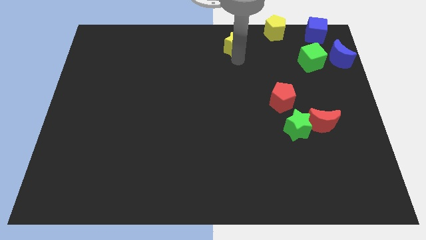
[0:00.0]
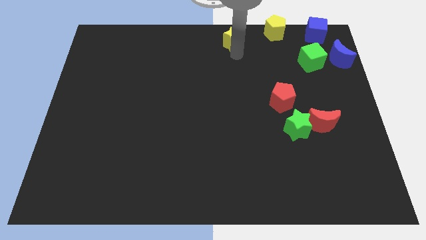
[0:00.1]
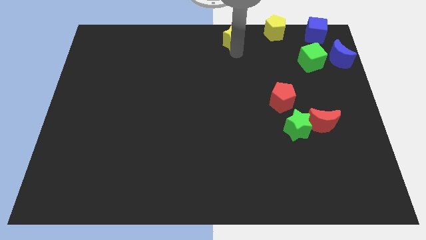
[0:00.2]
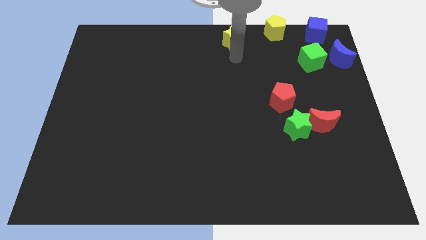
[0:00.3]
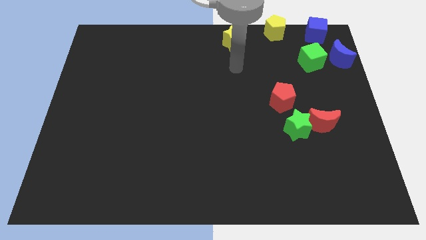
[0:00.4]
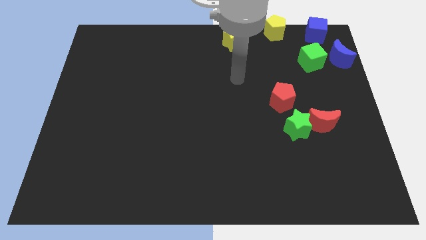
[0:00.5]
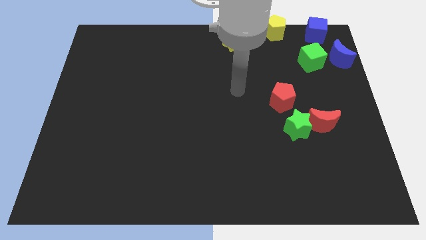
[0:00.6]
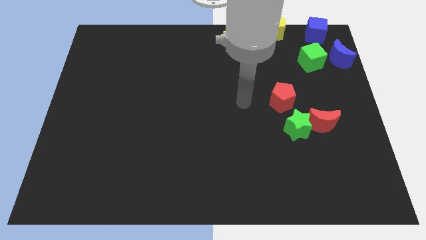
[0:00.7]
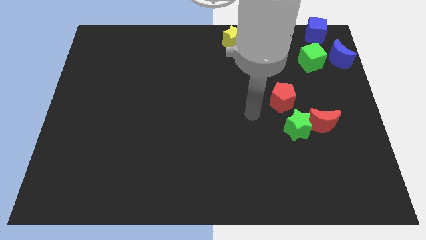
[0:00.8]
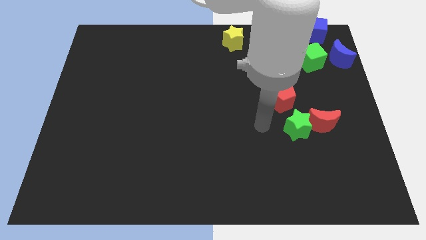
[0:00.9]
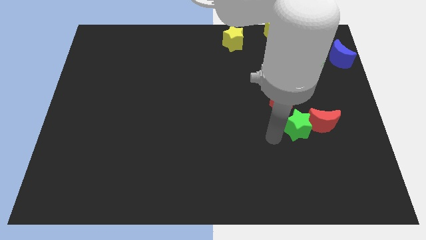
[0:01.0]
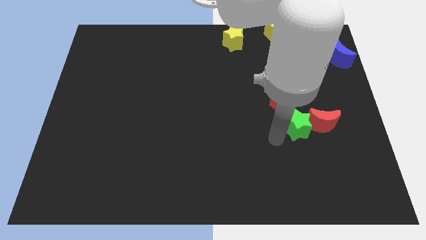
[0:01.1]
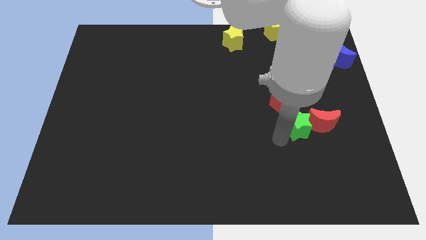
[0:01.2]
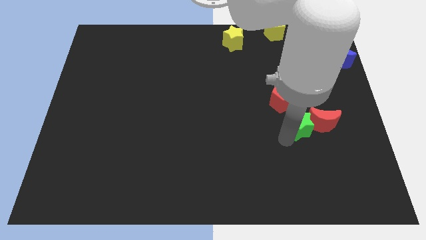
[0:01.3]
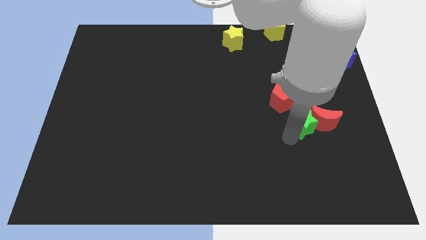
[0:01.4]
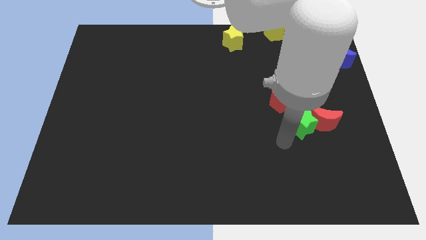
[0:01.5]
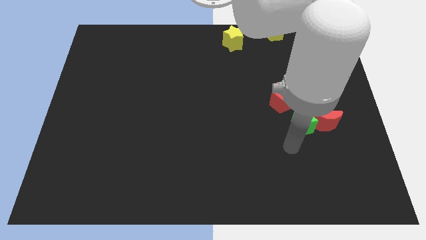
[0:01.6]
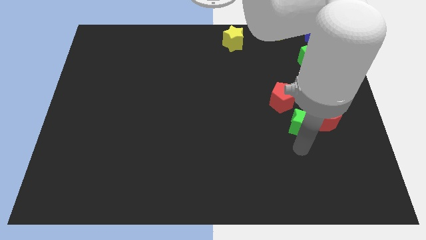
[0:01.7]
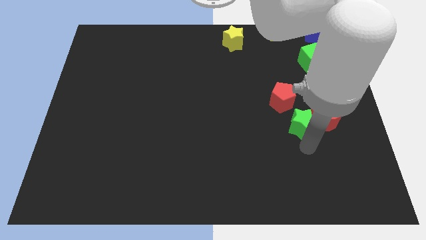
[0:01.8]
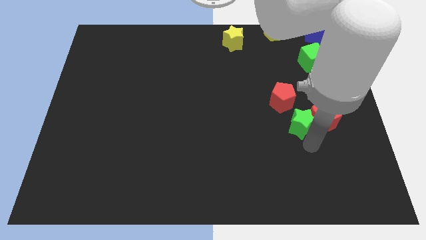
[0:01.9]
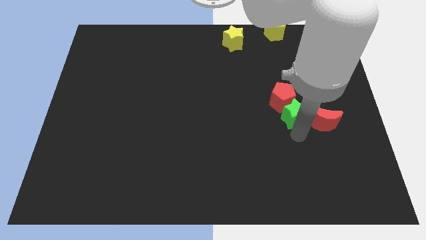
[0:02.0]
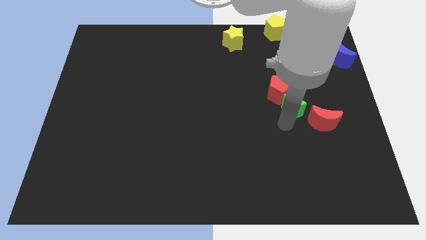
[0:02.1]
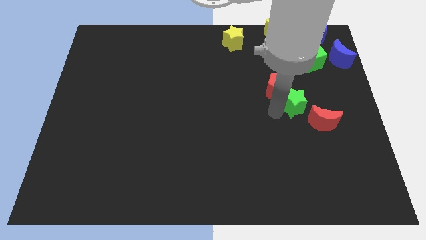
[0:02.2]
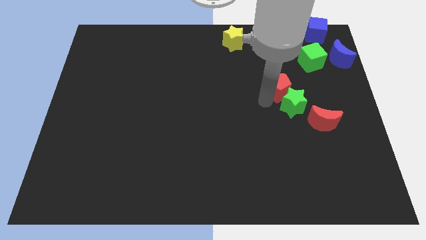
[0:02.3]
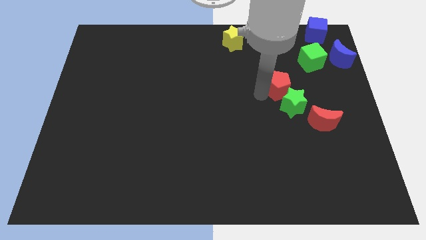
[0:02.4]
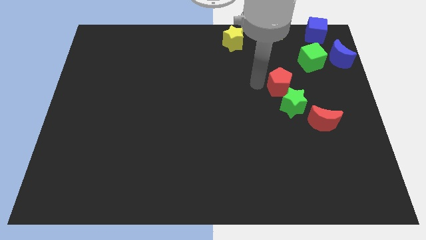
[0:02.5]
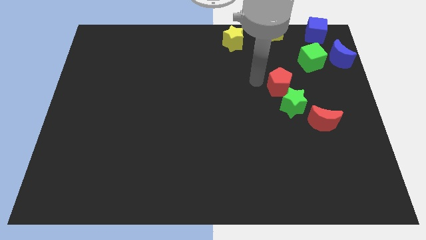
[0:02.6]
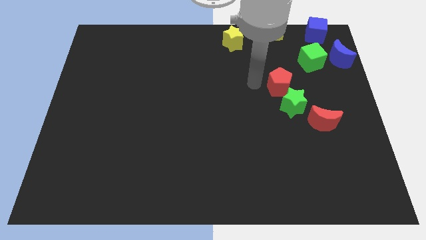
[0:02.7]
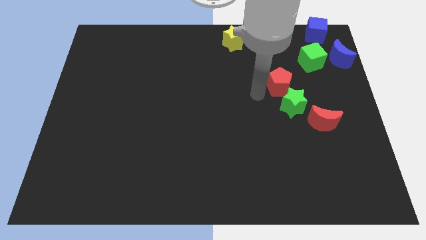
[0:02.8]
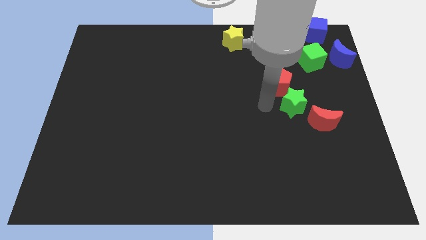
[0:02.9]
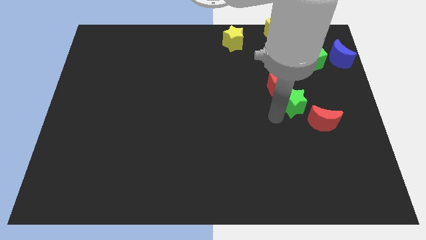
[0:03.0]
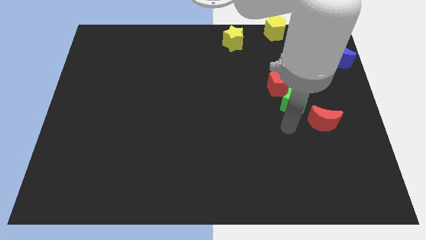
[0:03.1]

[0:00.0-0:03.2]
move green star into red pentagon

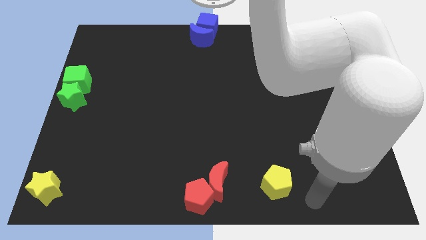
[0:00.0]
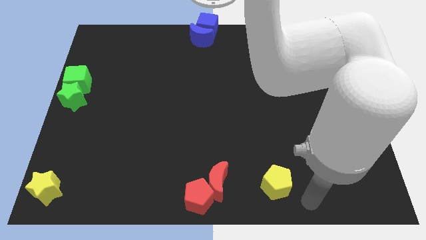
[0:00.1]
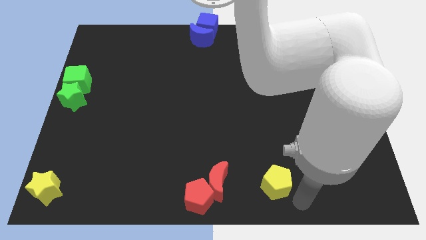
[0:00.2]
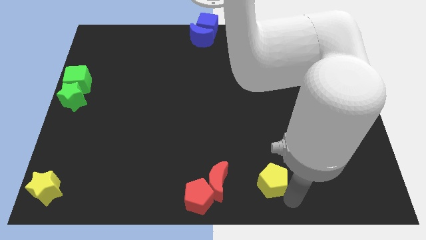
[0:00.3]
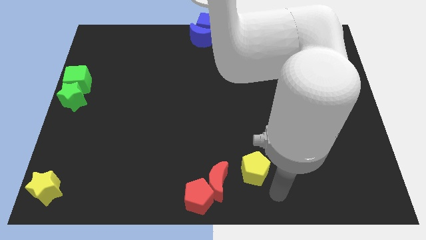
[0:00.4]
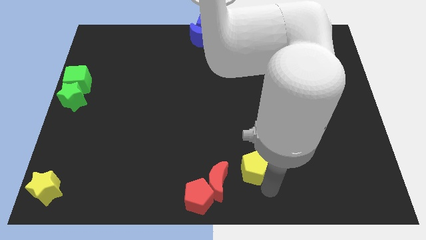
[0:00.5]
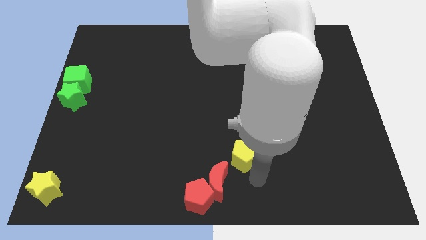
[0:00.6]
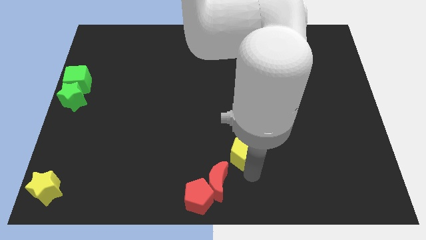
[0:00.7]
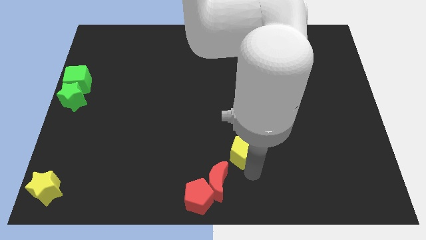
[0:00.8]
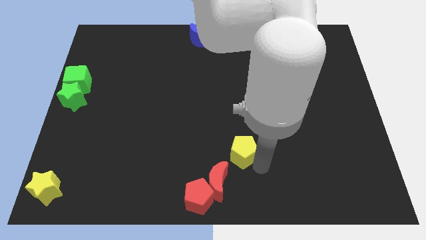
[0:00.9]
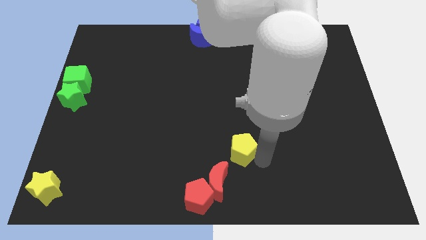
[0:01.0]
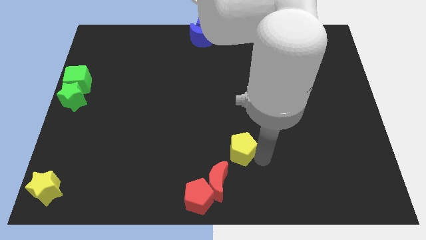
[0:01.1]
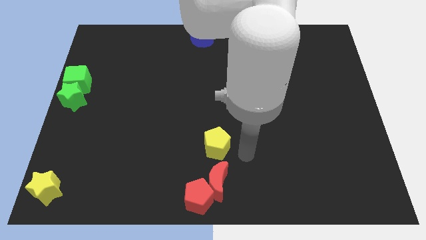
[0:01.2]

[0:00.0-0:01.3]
push yellow pentagon above red crescent

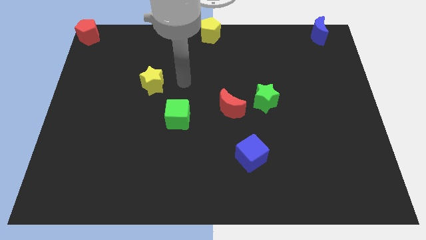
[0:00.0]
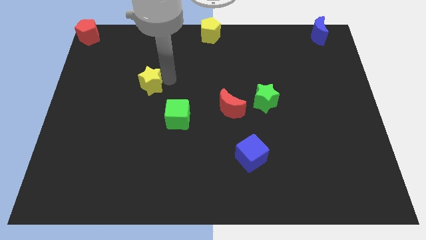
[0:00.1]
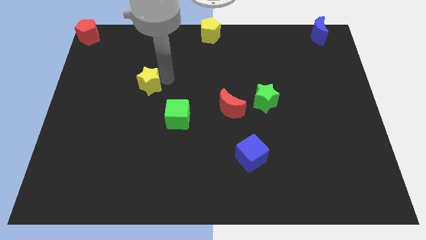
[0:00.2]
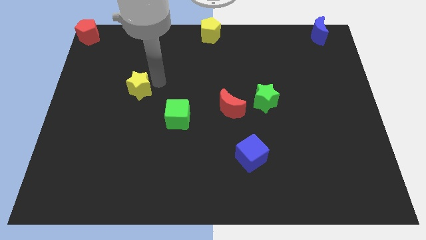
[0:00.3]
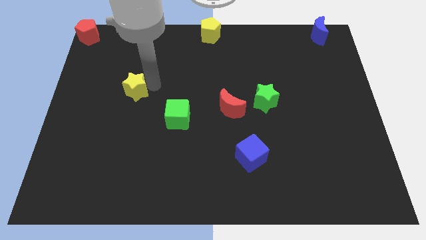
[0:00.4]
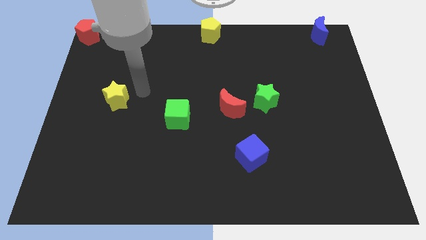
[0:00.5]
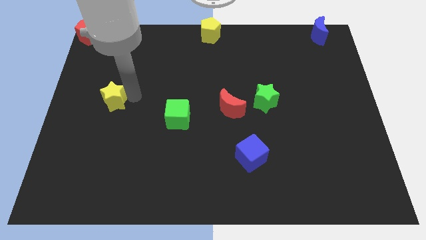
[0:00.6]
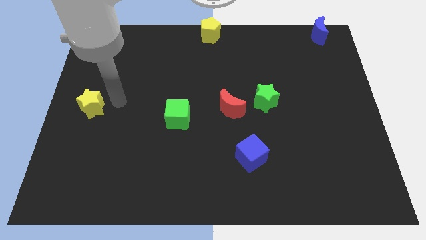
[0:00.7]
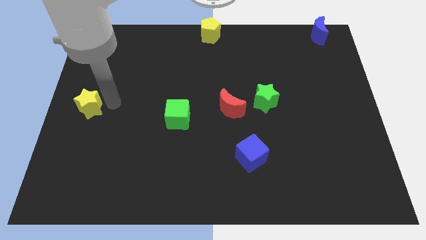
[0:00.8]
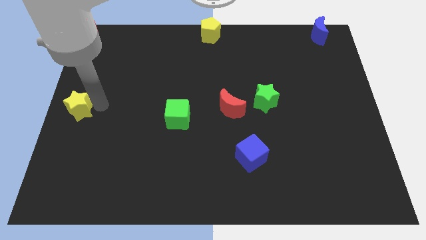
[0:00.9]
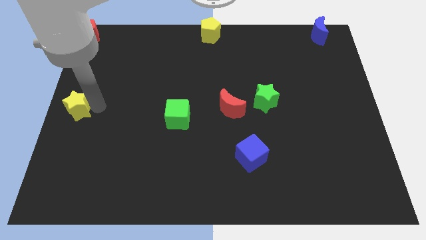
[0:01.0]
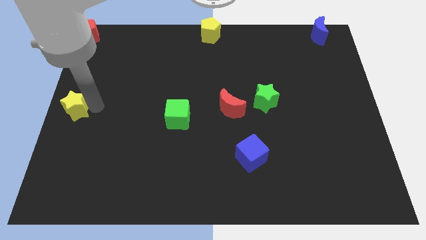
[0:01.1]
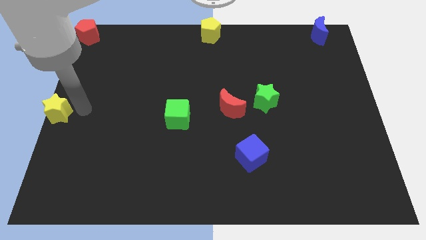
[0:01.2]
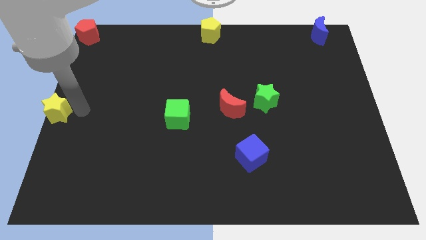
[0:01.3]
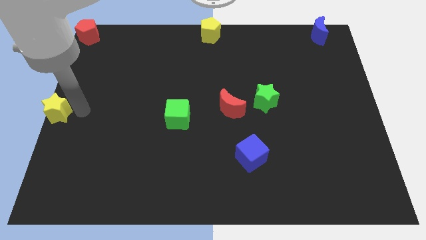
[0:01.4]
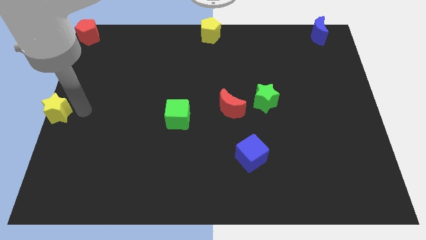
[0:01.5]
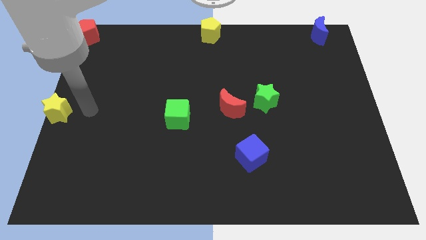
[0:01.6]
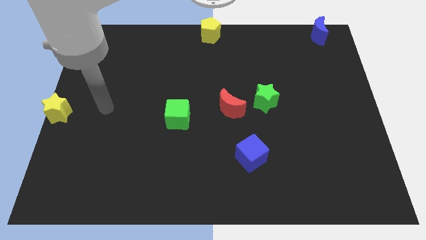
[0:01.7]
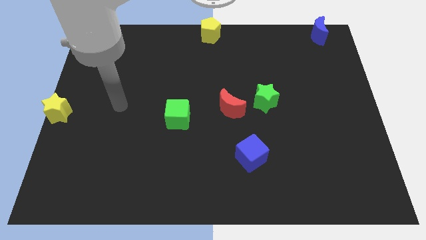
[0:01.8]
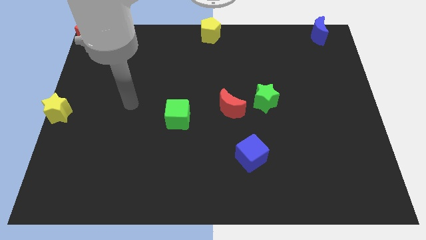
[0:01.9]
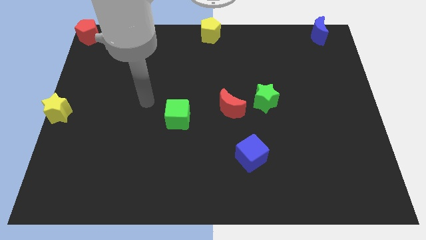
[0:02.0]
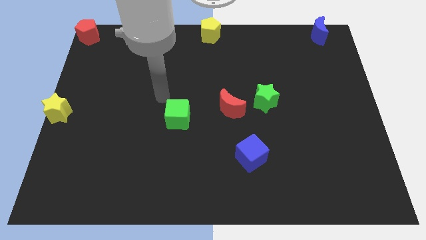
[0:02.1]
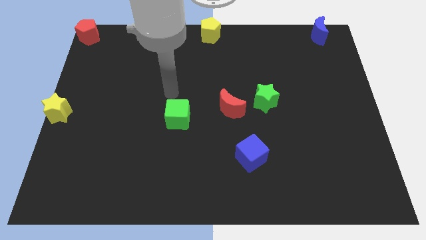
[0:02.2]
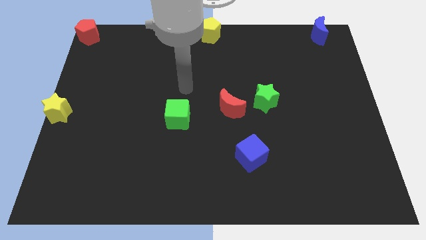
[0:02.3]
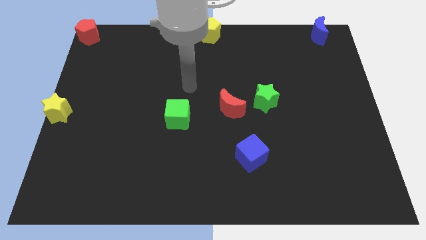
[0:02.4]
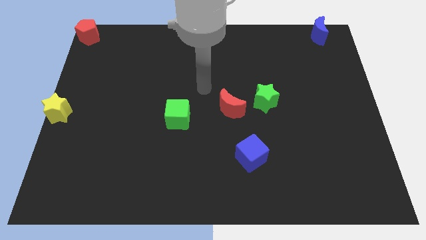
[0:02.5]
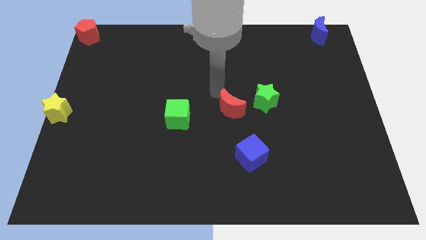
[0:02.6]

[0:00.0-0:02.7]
move the yellow star to the center left

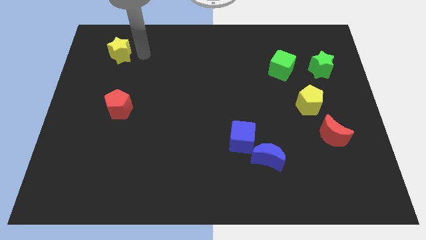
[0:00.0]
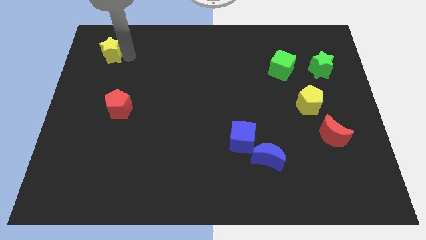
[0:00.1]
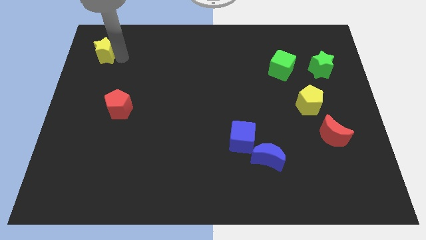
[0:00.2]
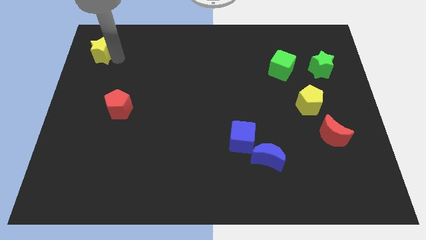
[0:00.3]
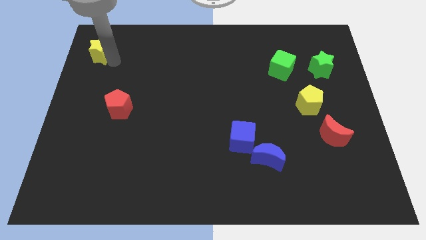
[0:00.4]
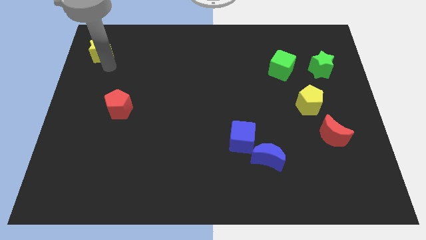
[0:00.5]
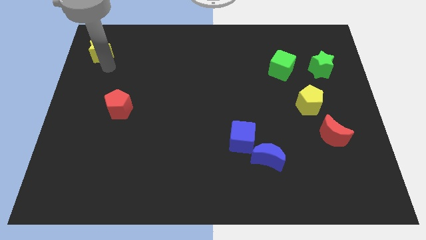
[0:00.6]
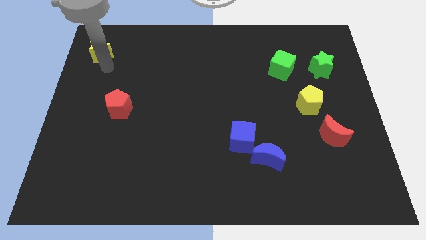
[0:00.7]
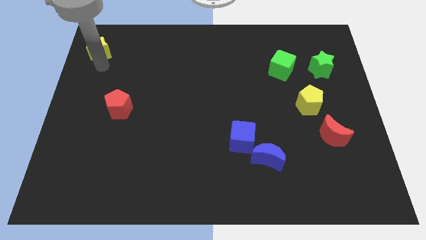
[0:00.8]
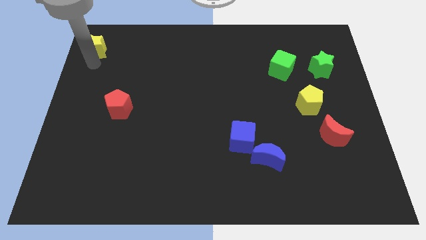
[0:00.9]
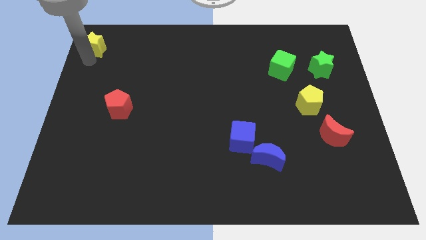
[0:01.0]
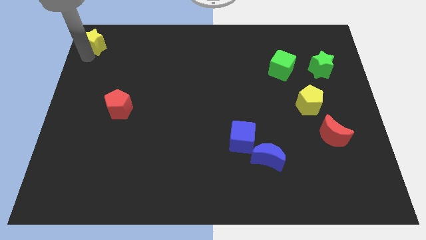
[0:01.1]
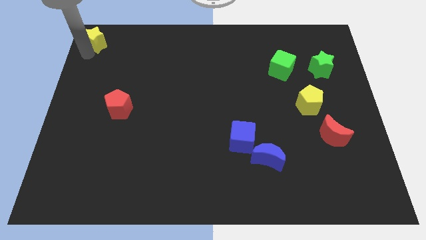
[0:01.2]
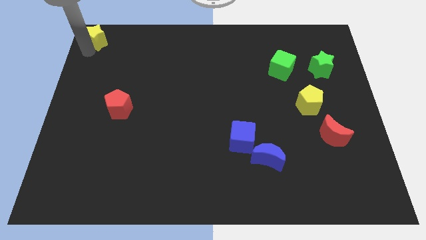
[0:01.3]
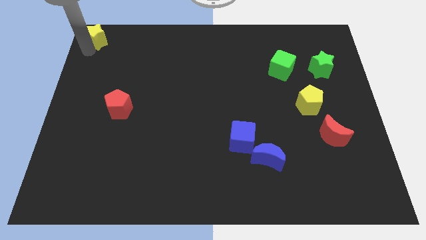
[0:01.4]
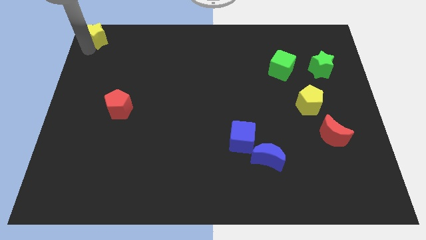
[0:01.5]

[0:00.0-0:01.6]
push the yellow star to the top left corner of the board
